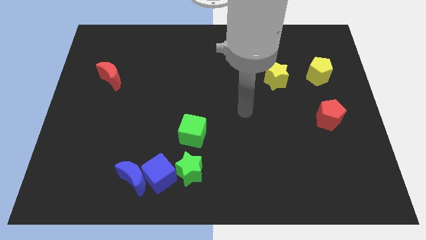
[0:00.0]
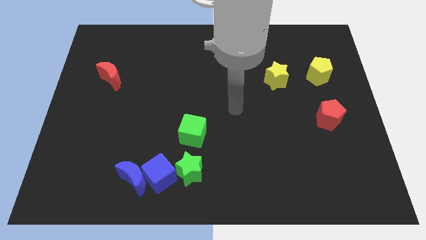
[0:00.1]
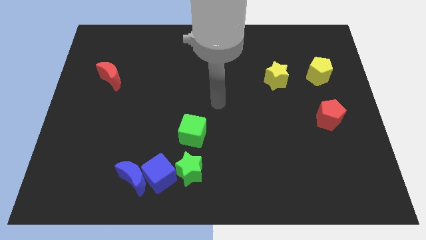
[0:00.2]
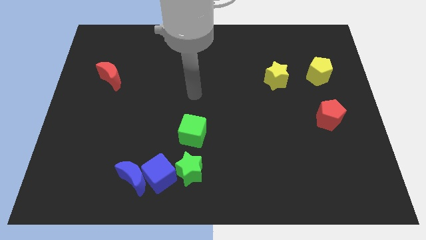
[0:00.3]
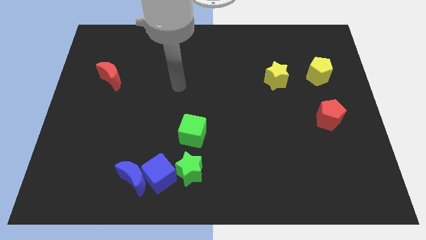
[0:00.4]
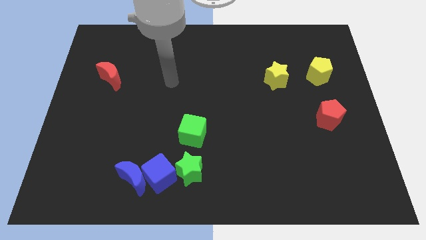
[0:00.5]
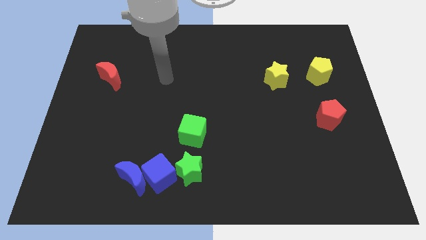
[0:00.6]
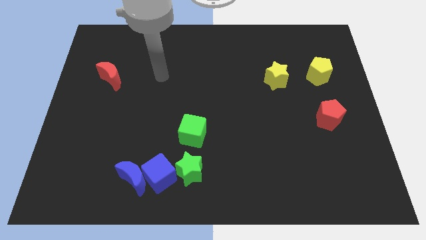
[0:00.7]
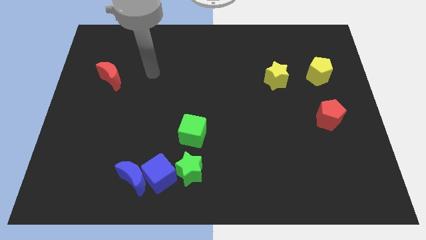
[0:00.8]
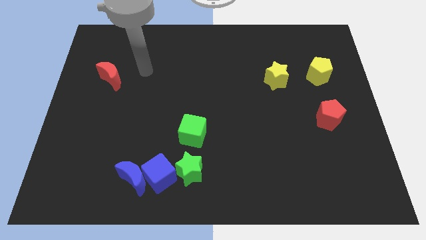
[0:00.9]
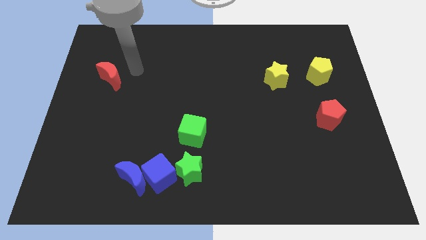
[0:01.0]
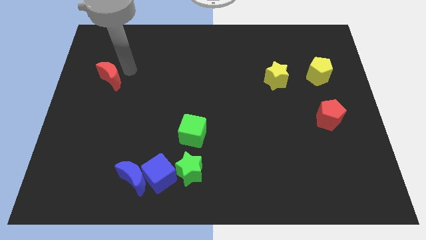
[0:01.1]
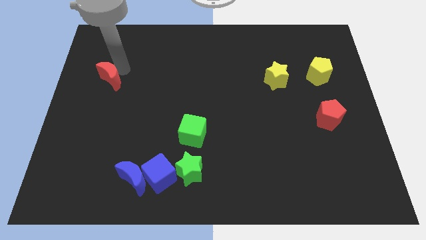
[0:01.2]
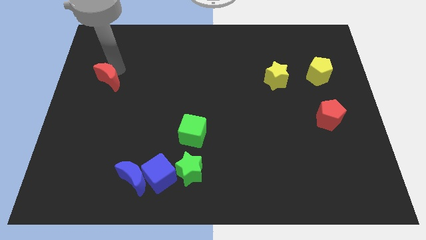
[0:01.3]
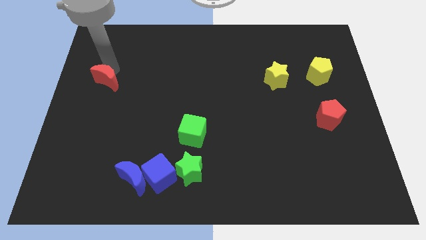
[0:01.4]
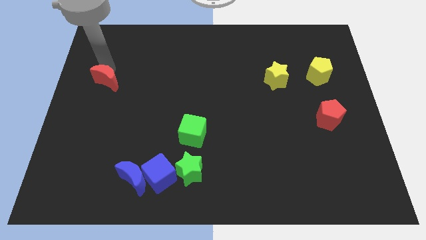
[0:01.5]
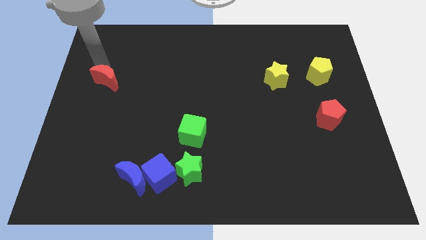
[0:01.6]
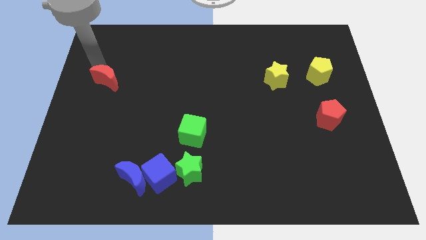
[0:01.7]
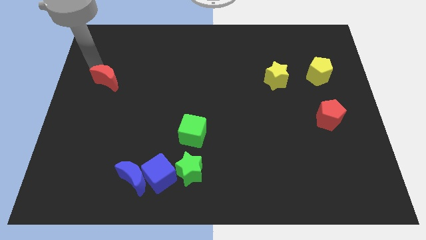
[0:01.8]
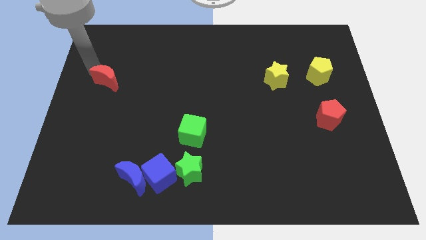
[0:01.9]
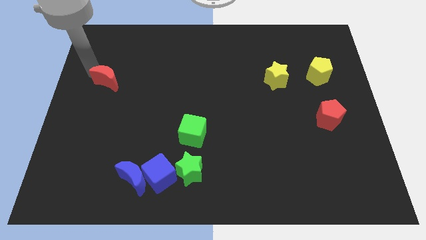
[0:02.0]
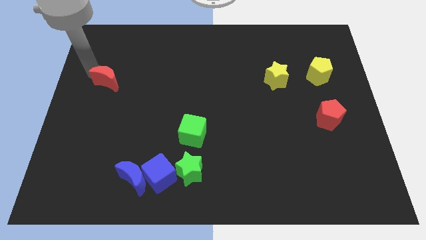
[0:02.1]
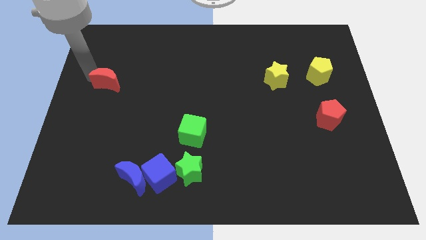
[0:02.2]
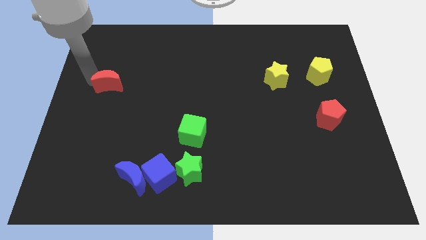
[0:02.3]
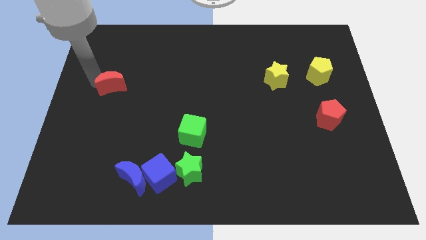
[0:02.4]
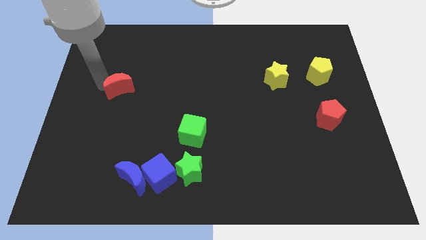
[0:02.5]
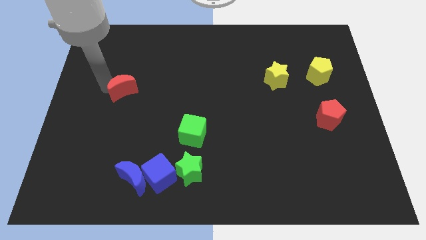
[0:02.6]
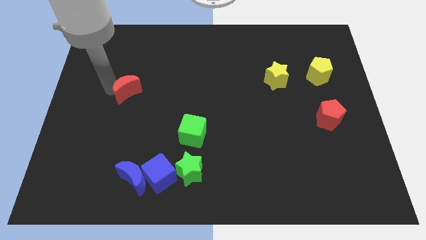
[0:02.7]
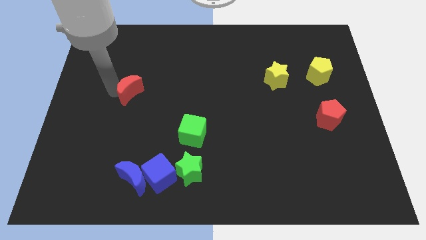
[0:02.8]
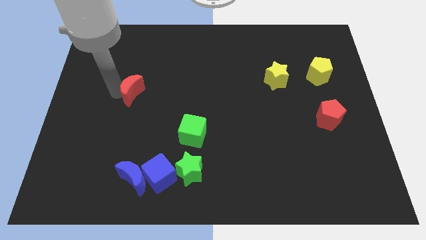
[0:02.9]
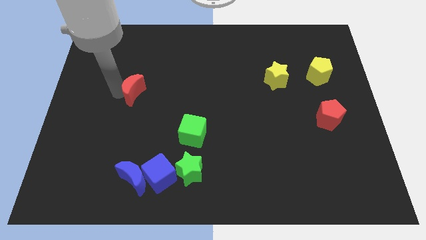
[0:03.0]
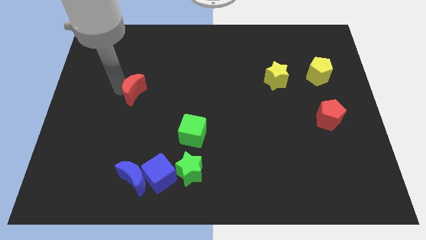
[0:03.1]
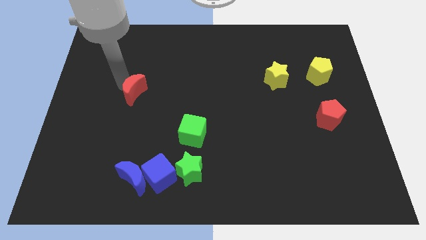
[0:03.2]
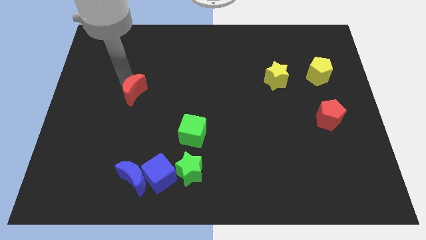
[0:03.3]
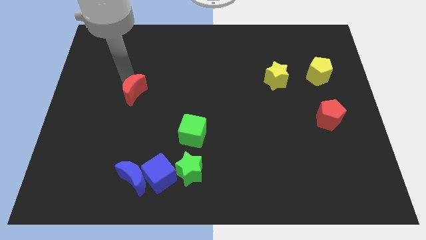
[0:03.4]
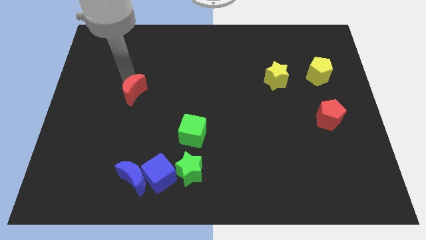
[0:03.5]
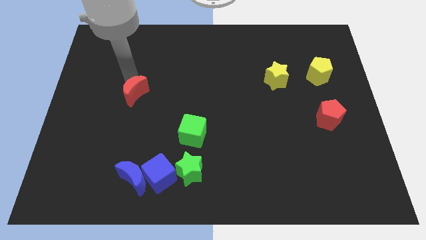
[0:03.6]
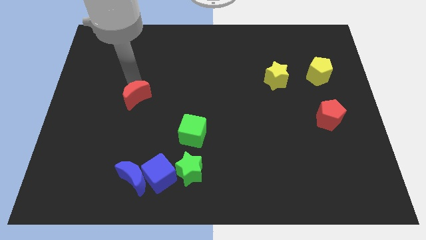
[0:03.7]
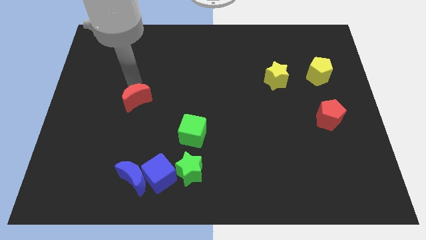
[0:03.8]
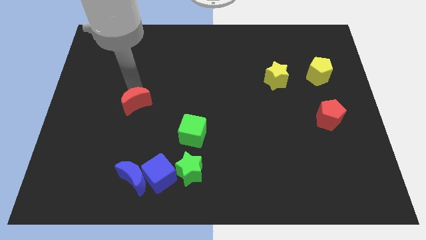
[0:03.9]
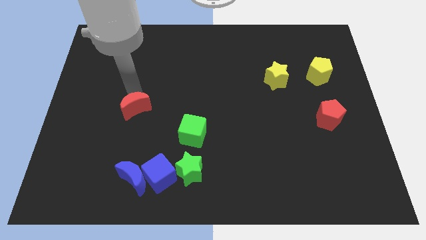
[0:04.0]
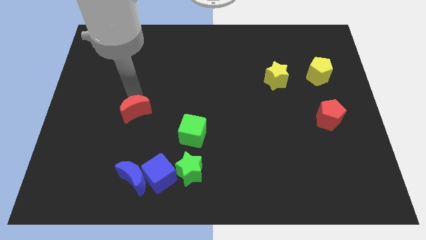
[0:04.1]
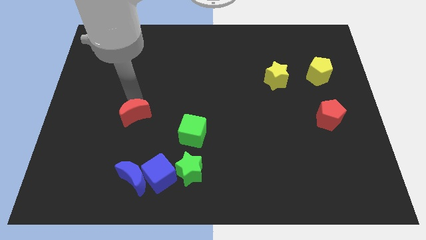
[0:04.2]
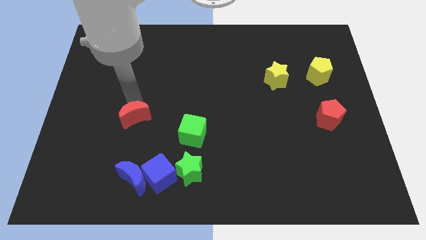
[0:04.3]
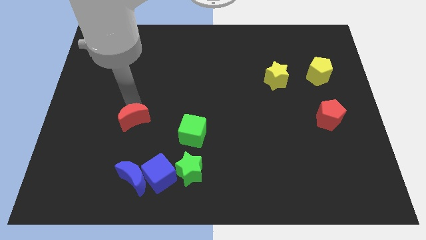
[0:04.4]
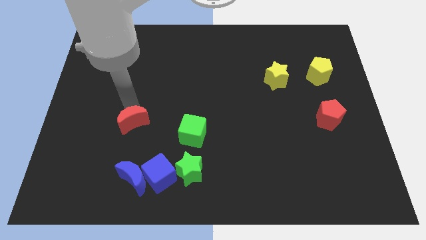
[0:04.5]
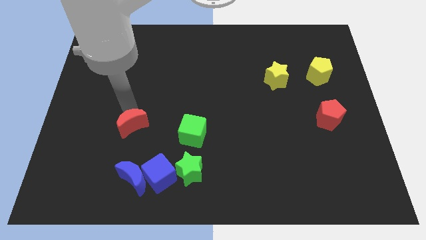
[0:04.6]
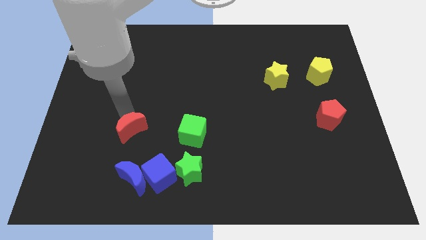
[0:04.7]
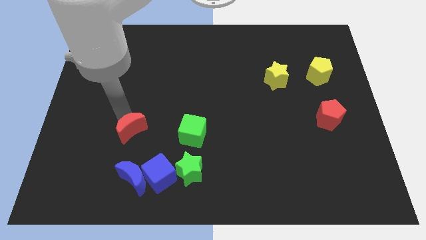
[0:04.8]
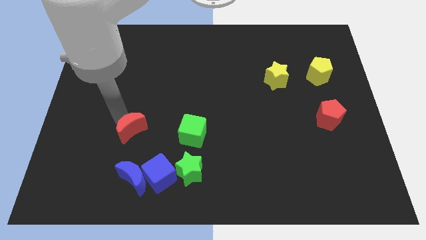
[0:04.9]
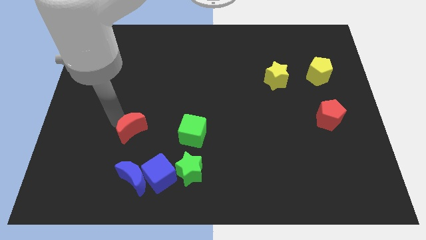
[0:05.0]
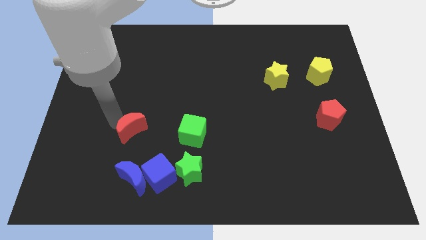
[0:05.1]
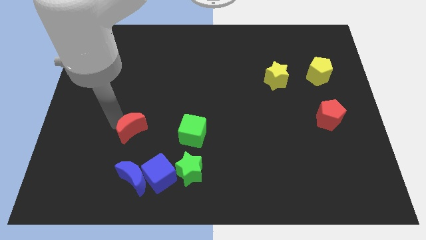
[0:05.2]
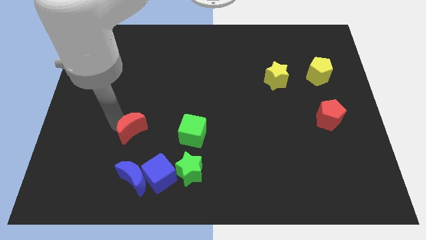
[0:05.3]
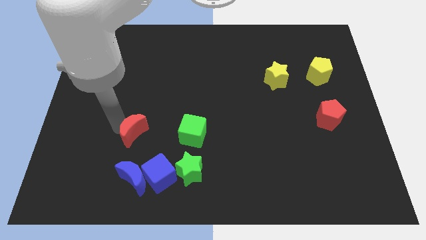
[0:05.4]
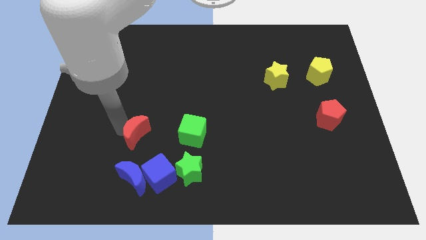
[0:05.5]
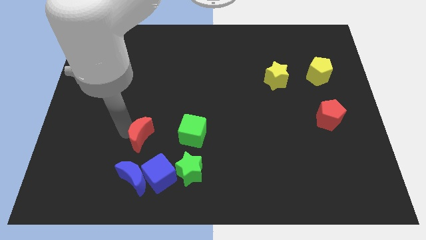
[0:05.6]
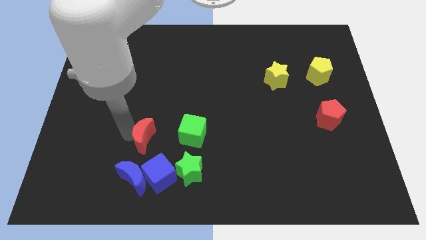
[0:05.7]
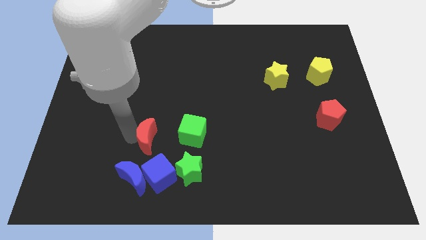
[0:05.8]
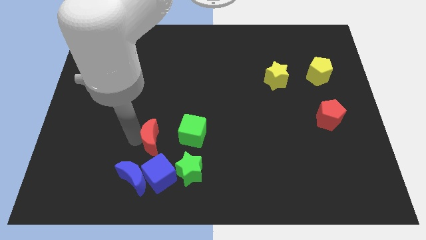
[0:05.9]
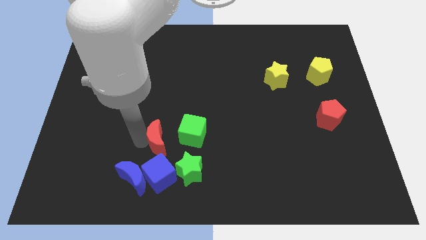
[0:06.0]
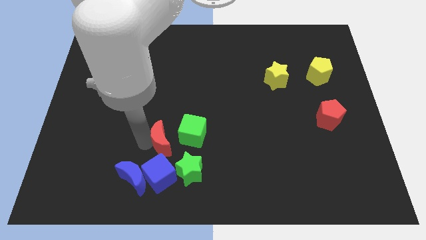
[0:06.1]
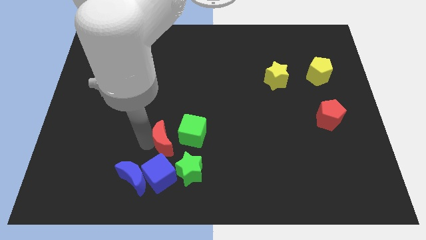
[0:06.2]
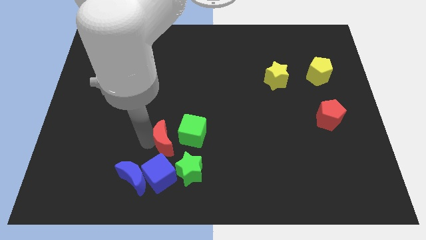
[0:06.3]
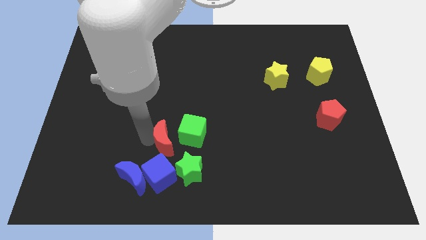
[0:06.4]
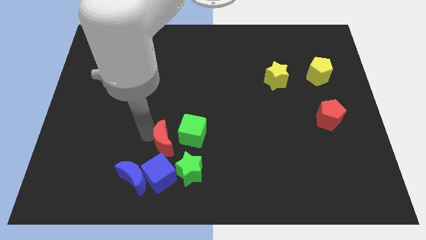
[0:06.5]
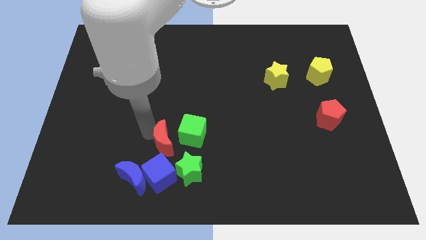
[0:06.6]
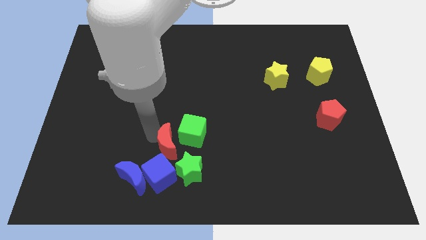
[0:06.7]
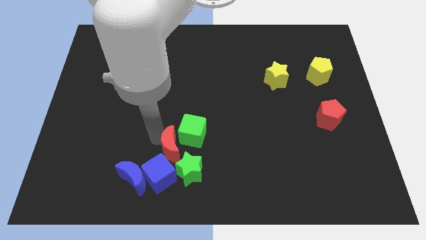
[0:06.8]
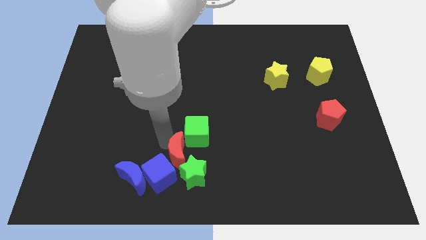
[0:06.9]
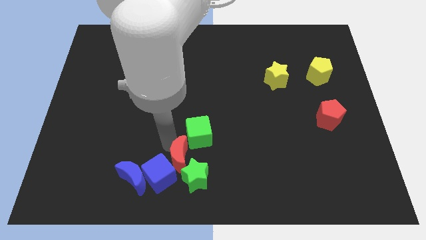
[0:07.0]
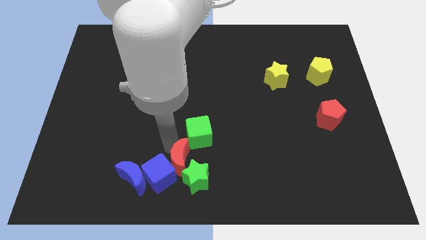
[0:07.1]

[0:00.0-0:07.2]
push the red moon to the green star

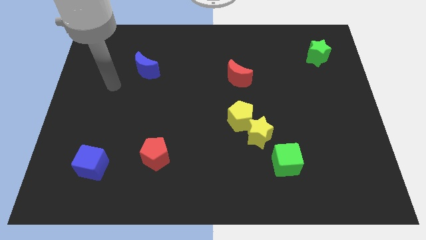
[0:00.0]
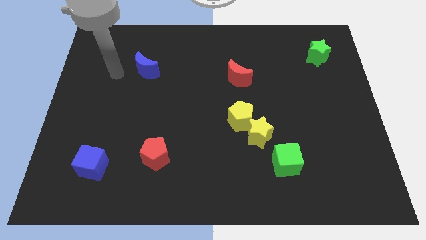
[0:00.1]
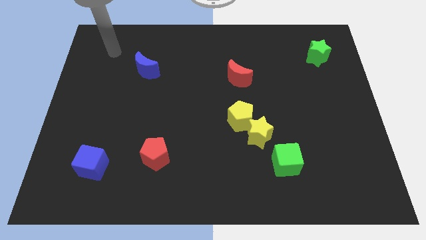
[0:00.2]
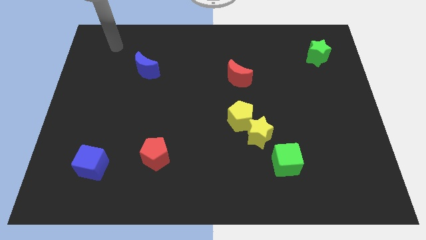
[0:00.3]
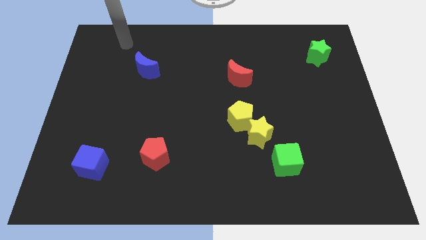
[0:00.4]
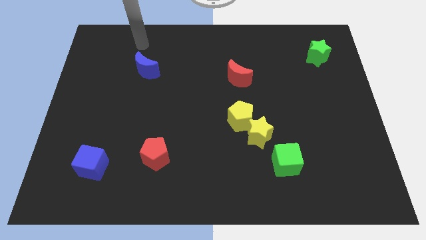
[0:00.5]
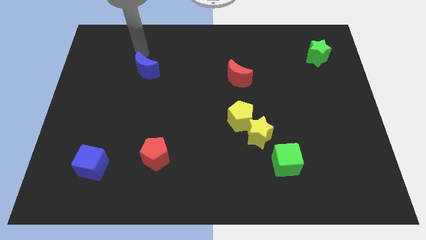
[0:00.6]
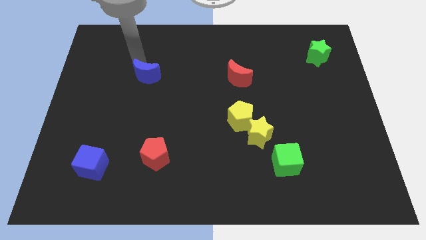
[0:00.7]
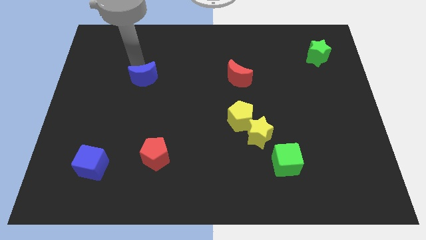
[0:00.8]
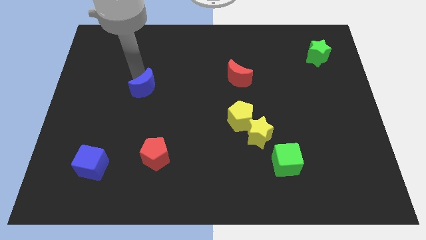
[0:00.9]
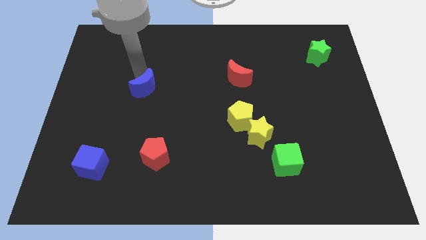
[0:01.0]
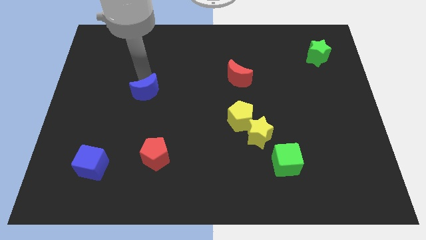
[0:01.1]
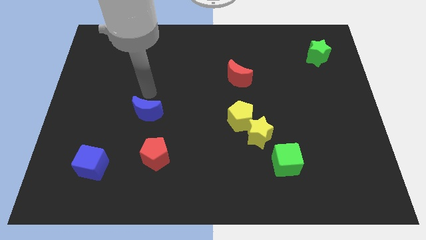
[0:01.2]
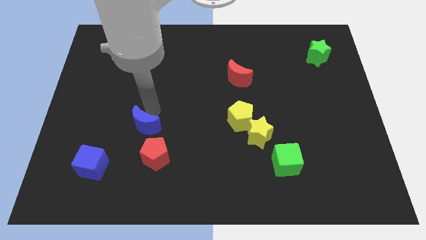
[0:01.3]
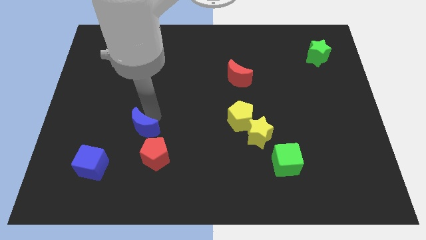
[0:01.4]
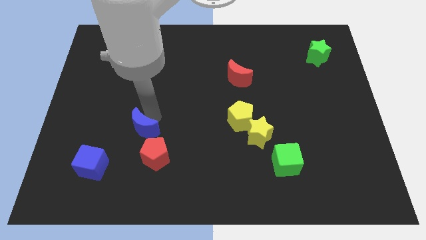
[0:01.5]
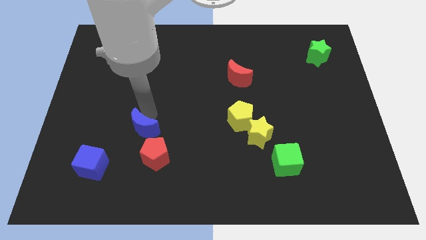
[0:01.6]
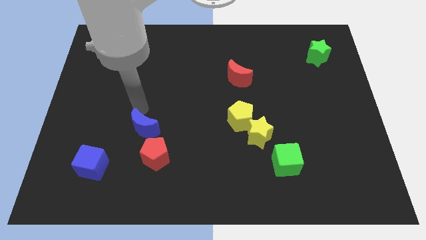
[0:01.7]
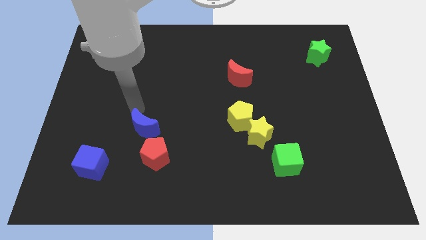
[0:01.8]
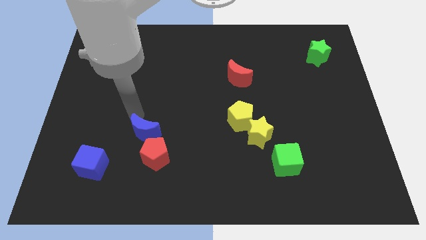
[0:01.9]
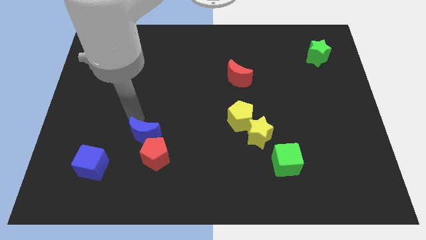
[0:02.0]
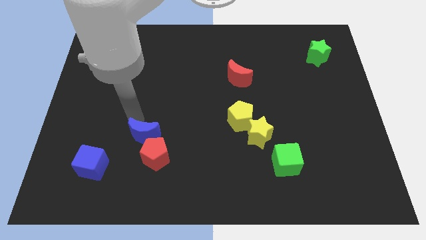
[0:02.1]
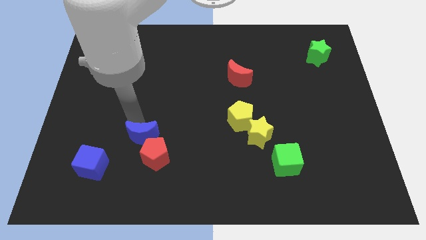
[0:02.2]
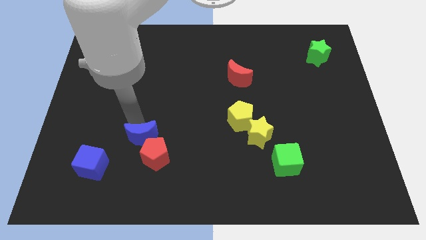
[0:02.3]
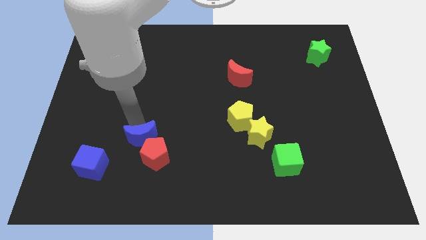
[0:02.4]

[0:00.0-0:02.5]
put the blue moon to the red pentagon
